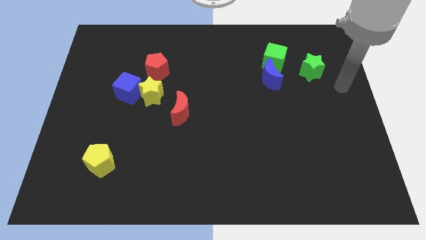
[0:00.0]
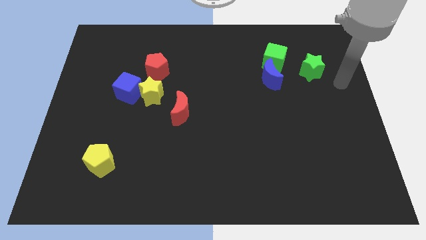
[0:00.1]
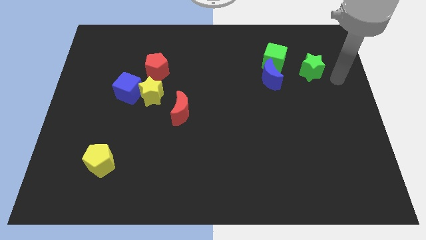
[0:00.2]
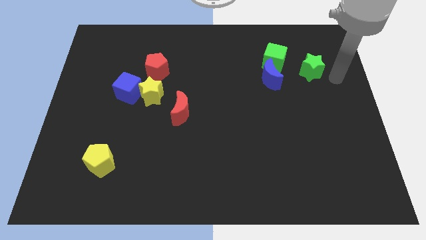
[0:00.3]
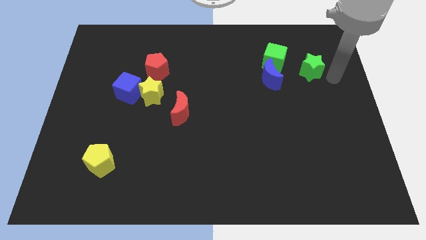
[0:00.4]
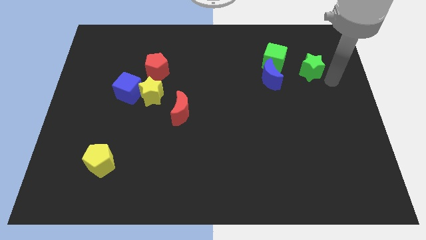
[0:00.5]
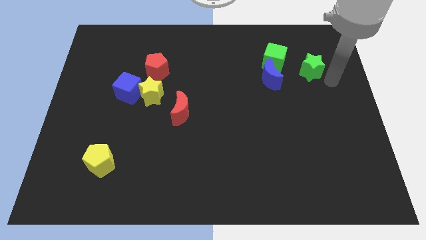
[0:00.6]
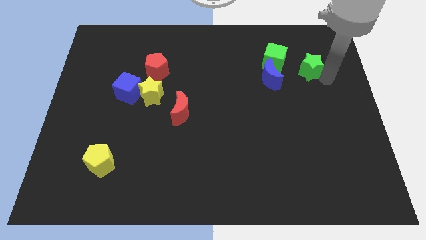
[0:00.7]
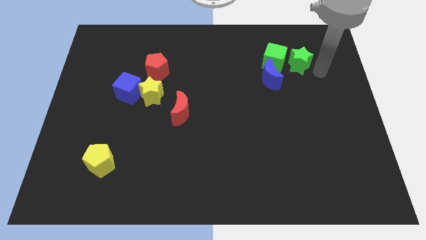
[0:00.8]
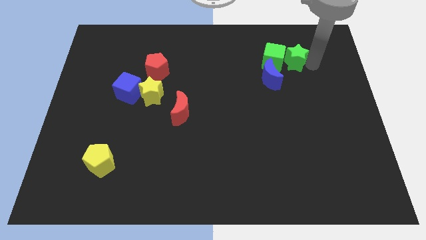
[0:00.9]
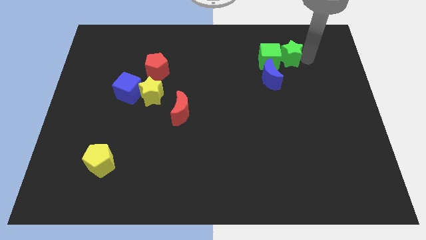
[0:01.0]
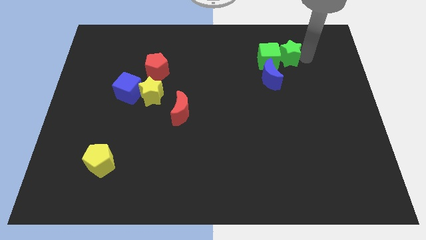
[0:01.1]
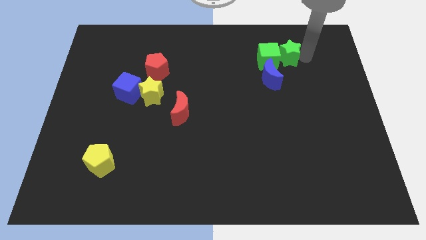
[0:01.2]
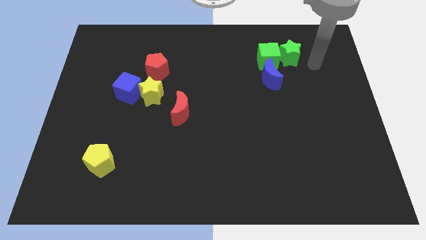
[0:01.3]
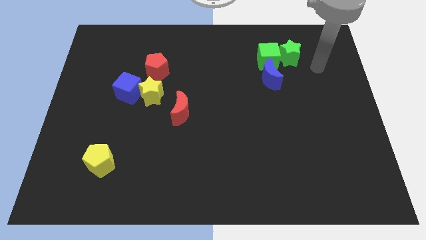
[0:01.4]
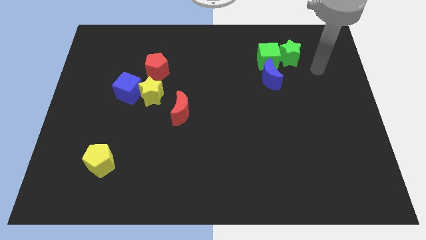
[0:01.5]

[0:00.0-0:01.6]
push the green star into the green cube

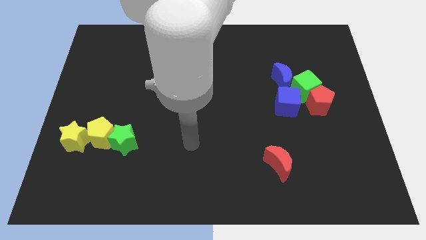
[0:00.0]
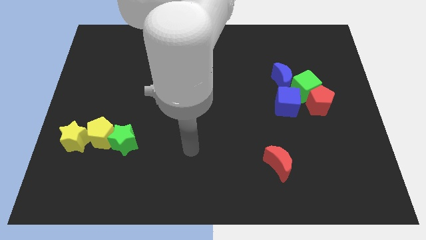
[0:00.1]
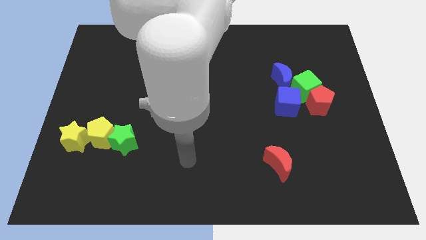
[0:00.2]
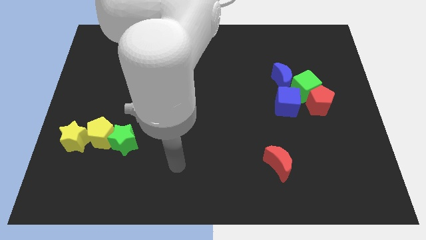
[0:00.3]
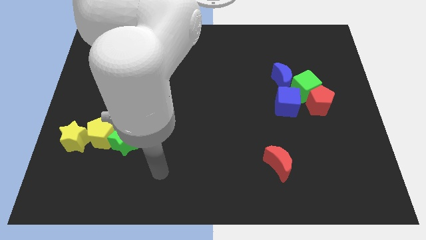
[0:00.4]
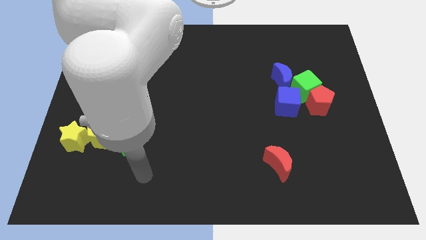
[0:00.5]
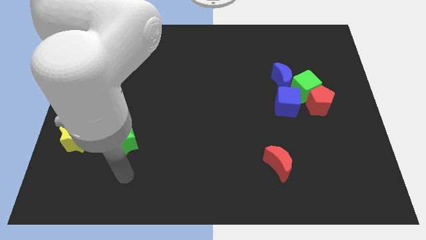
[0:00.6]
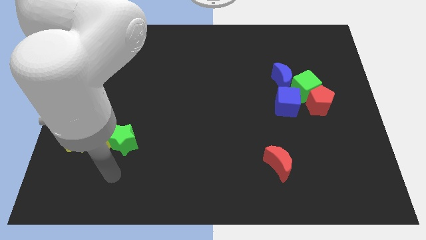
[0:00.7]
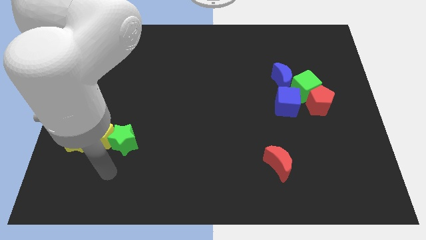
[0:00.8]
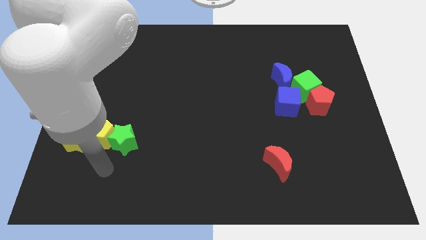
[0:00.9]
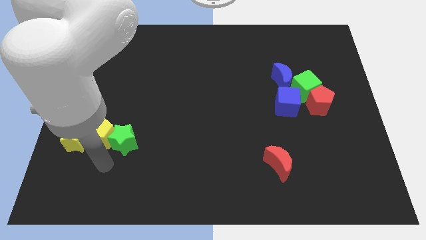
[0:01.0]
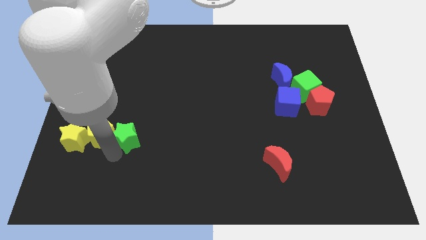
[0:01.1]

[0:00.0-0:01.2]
put your arm to the bottom of green star

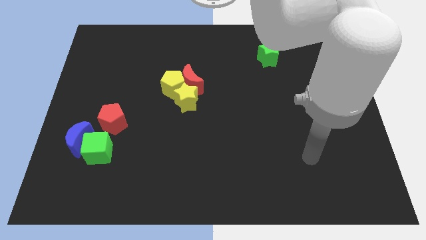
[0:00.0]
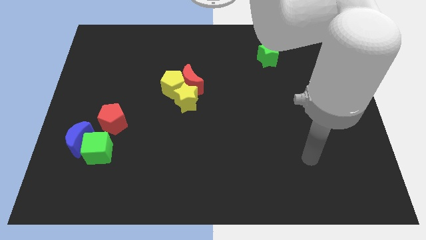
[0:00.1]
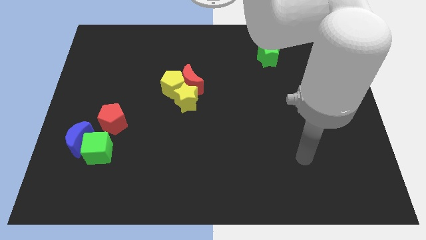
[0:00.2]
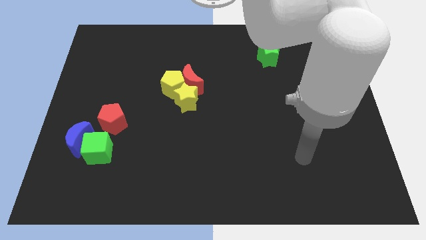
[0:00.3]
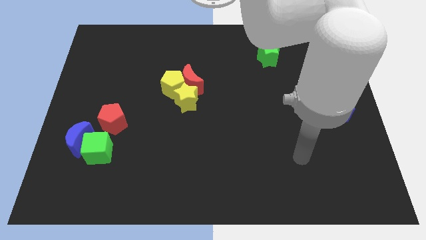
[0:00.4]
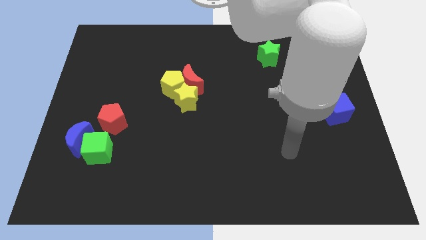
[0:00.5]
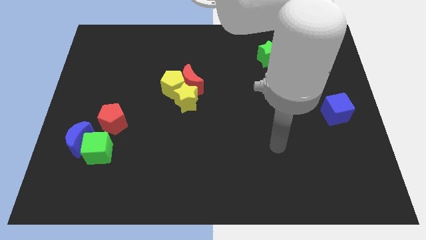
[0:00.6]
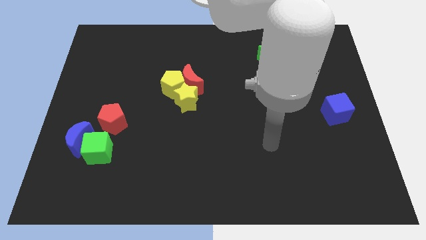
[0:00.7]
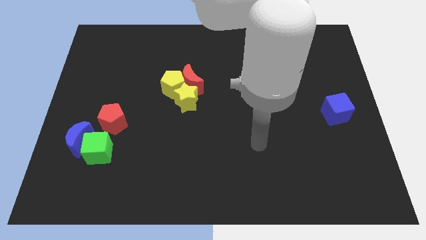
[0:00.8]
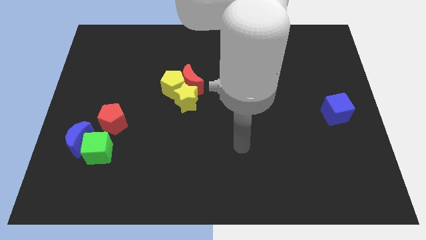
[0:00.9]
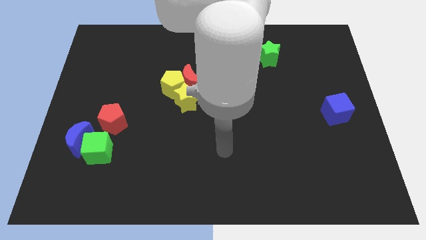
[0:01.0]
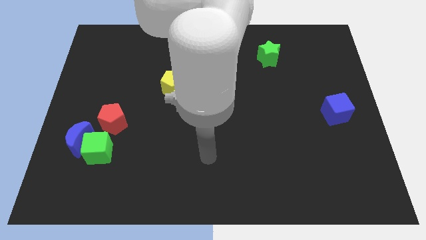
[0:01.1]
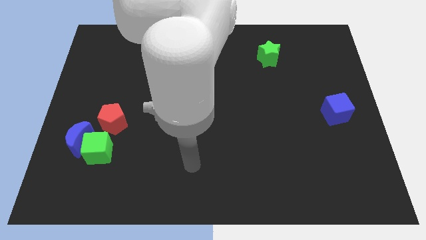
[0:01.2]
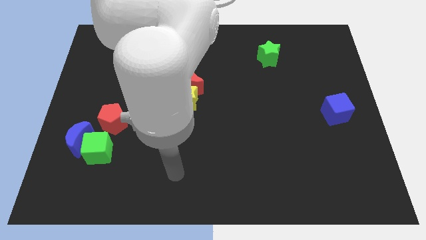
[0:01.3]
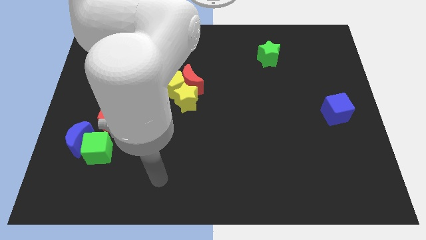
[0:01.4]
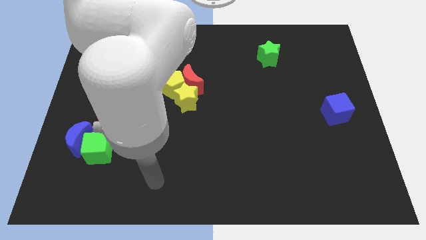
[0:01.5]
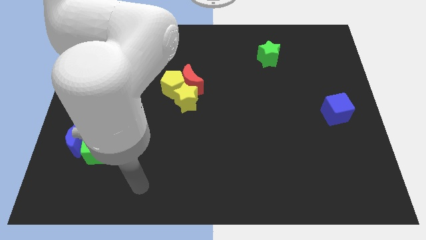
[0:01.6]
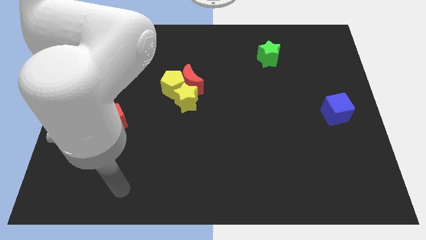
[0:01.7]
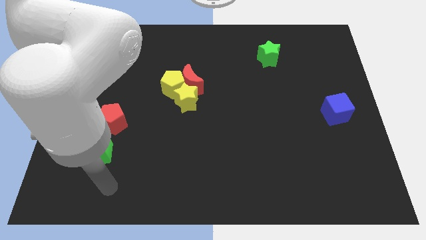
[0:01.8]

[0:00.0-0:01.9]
move your arm to the bottom of the green cube

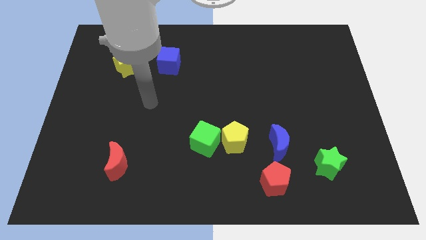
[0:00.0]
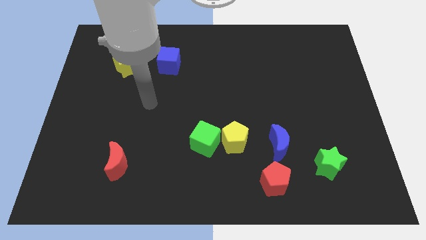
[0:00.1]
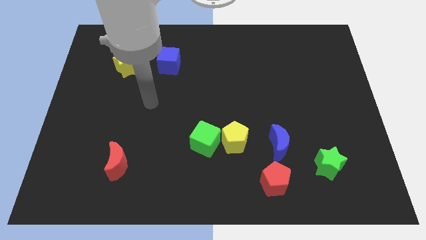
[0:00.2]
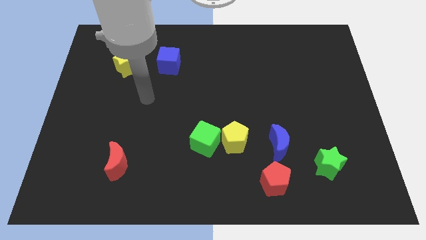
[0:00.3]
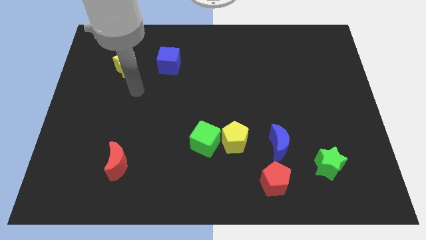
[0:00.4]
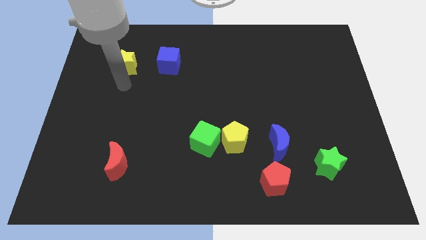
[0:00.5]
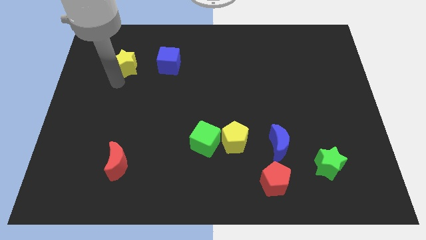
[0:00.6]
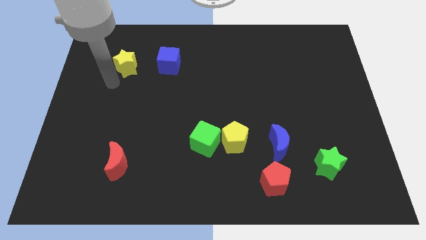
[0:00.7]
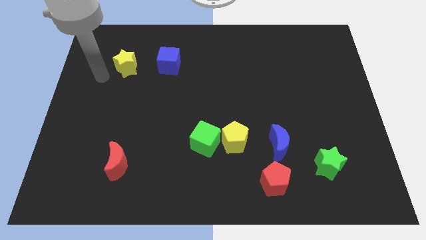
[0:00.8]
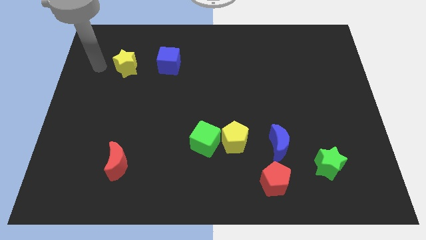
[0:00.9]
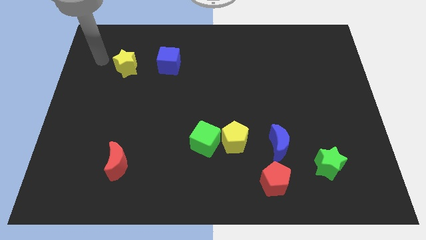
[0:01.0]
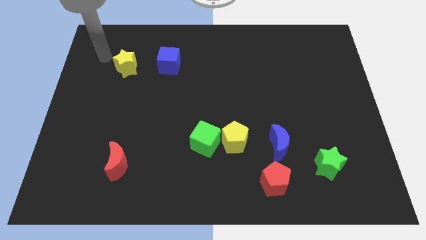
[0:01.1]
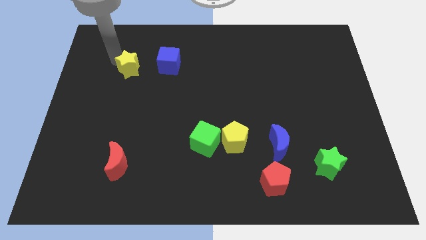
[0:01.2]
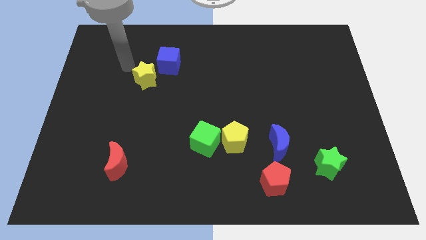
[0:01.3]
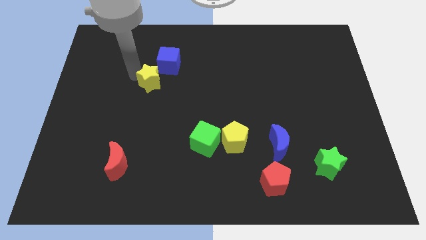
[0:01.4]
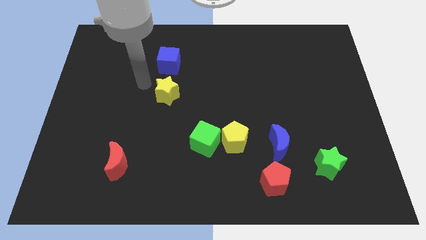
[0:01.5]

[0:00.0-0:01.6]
push the yellow star slightly towards the center of the board

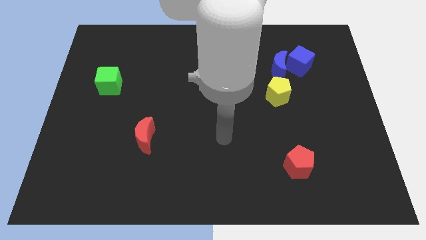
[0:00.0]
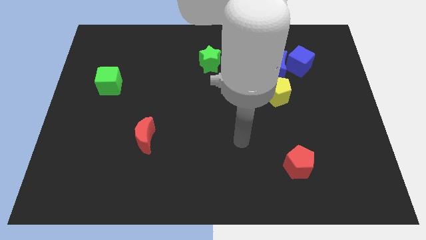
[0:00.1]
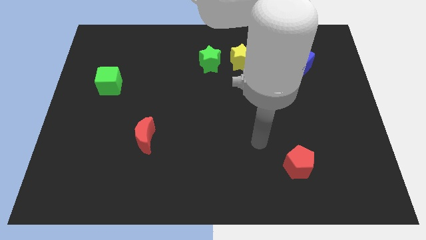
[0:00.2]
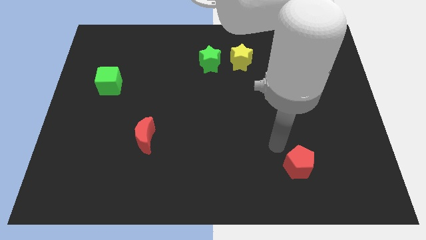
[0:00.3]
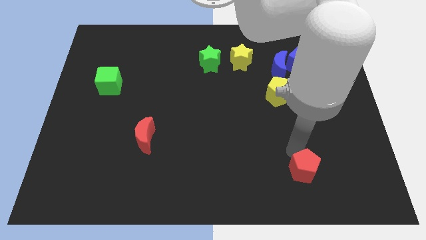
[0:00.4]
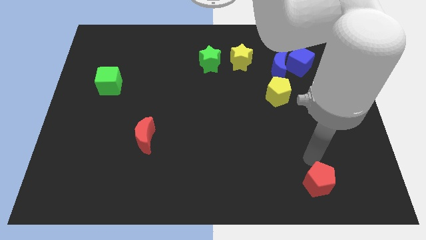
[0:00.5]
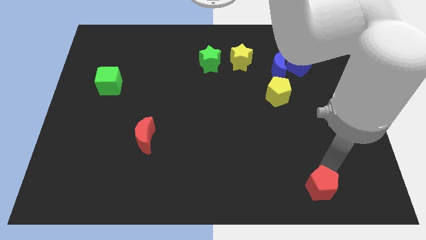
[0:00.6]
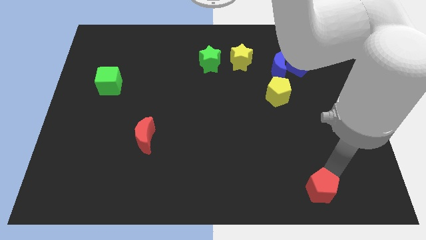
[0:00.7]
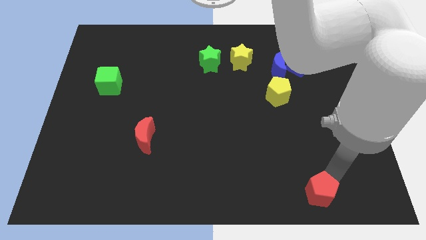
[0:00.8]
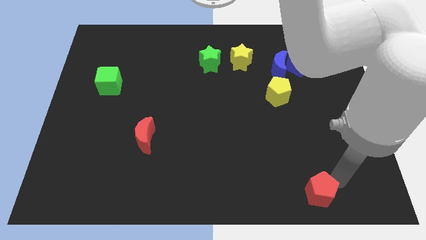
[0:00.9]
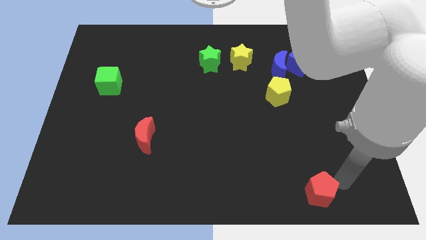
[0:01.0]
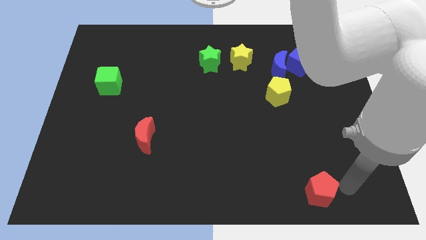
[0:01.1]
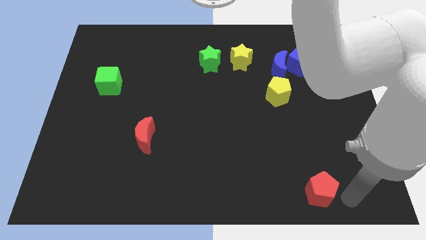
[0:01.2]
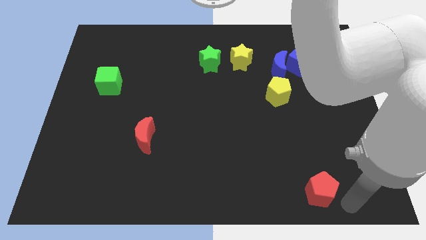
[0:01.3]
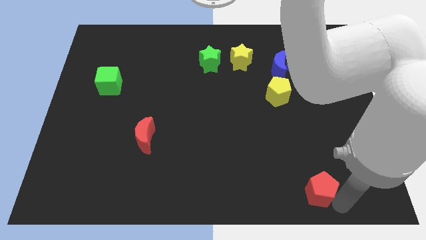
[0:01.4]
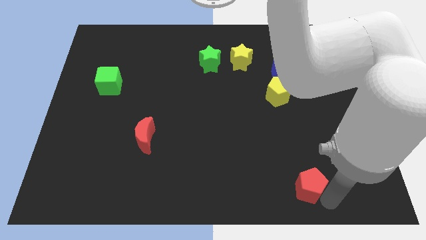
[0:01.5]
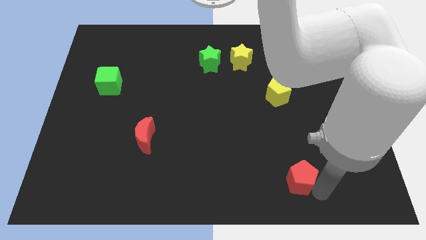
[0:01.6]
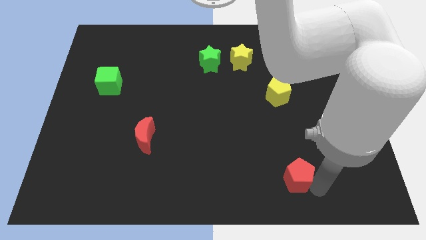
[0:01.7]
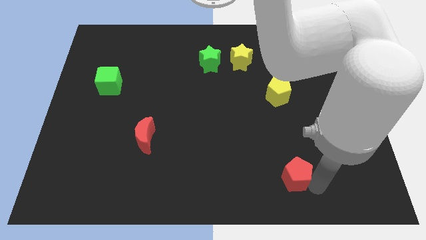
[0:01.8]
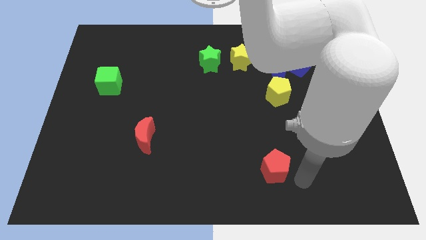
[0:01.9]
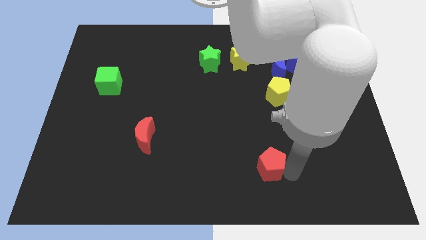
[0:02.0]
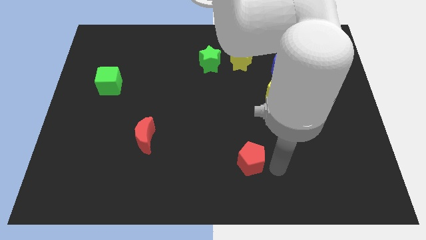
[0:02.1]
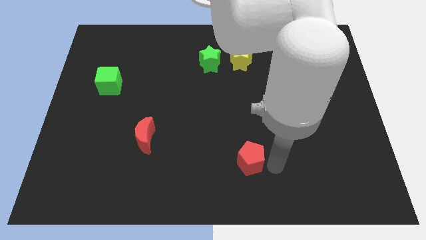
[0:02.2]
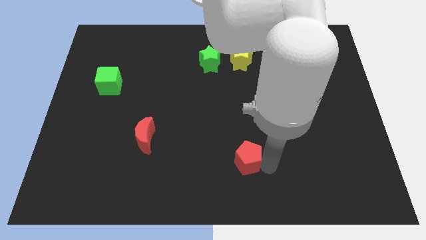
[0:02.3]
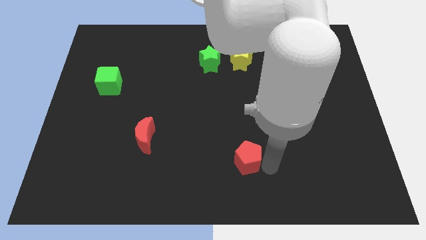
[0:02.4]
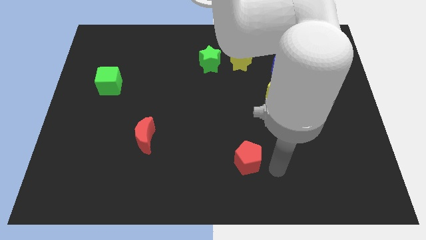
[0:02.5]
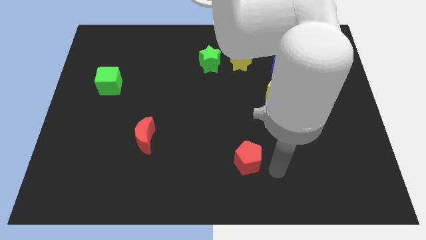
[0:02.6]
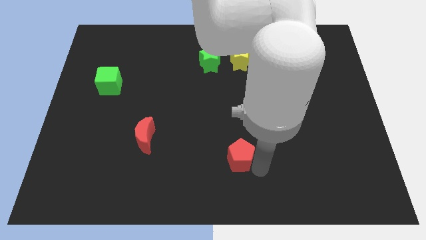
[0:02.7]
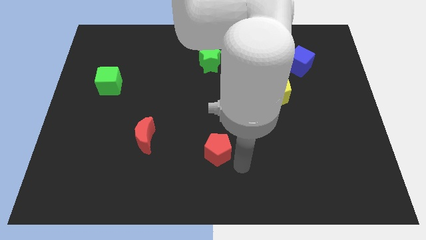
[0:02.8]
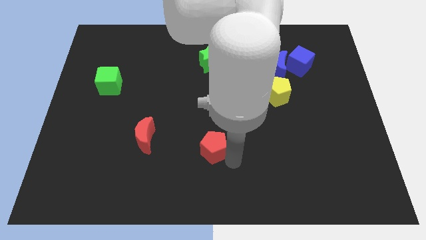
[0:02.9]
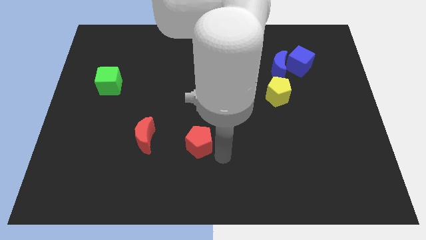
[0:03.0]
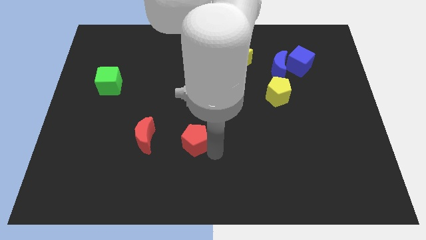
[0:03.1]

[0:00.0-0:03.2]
slide the red pentagon parallel right to the red moon
